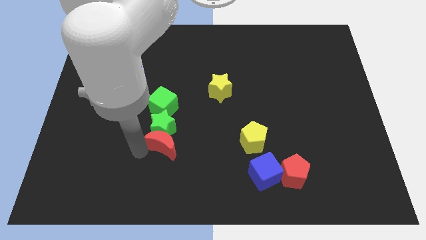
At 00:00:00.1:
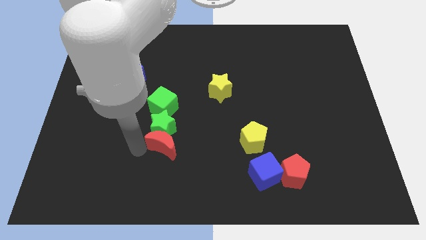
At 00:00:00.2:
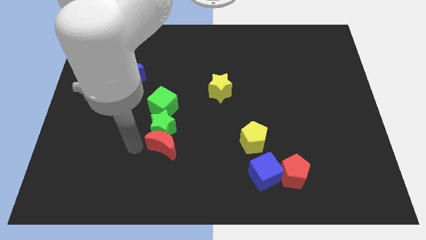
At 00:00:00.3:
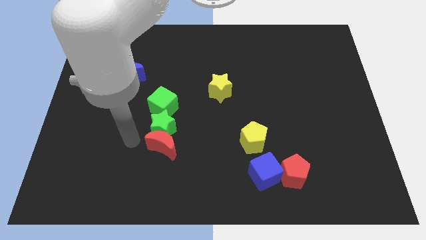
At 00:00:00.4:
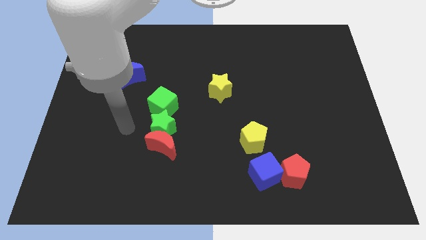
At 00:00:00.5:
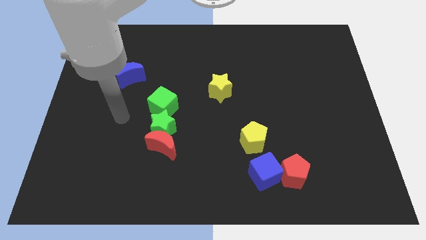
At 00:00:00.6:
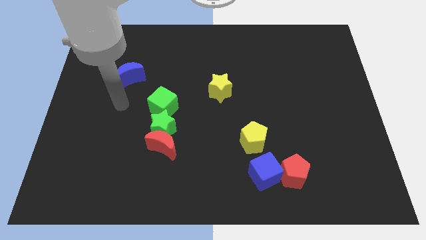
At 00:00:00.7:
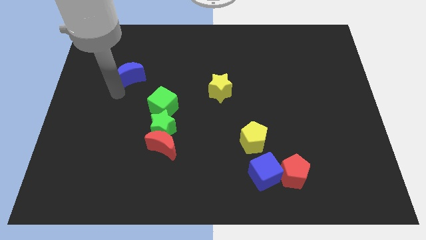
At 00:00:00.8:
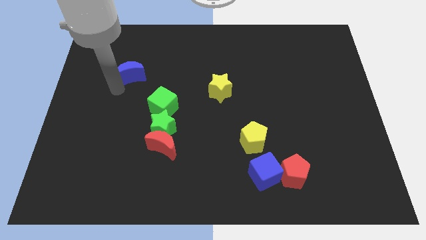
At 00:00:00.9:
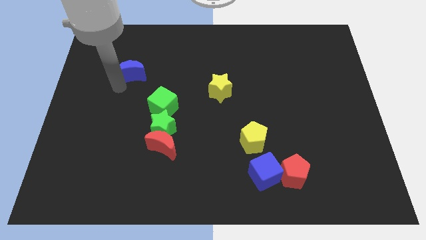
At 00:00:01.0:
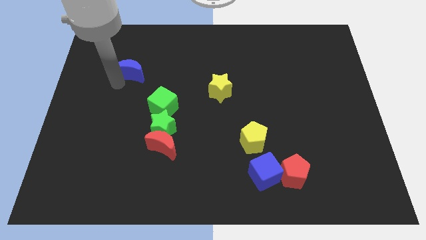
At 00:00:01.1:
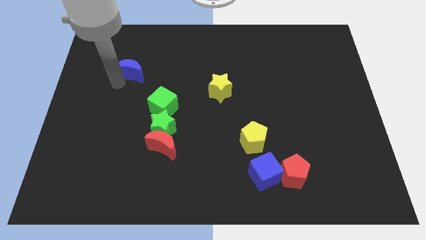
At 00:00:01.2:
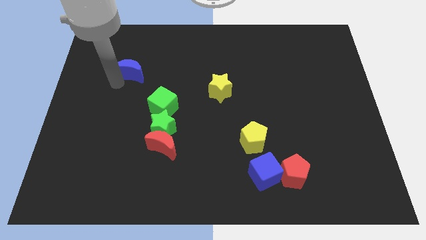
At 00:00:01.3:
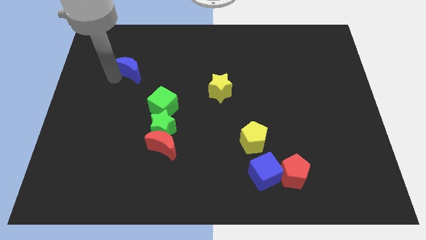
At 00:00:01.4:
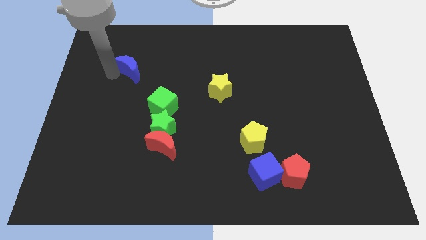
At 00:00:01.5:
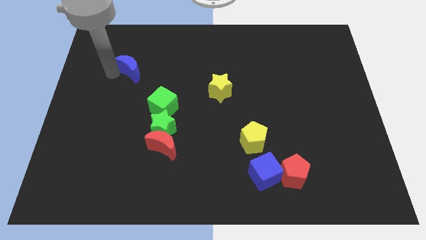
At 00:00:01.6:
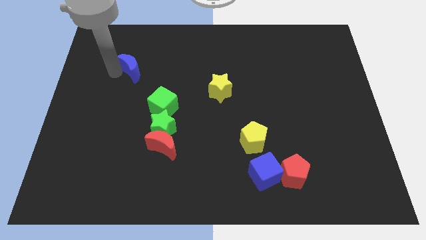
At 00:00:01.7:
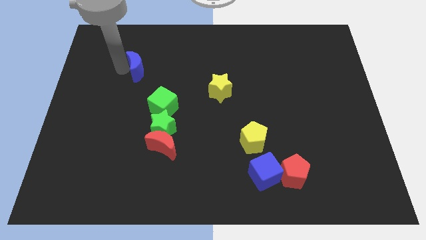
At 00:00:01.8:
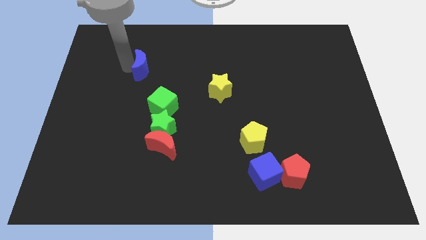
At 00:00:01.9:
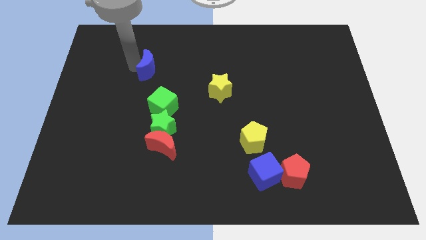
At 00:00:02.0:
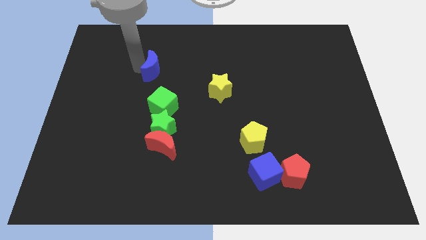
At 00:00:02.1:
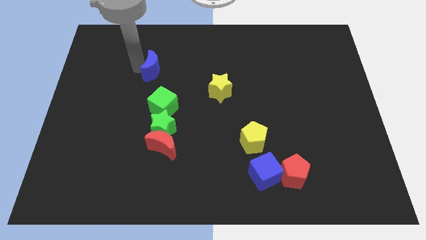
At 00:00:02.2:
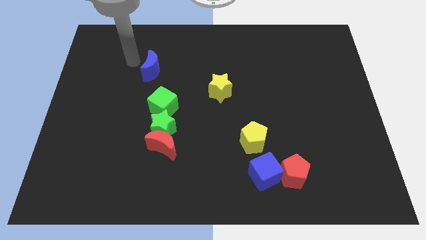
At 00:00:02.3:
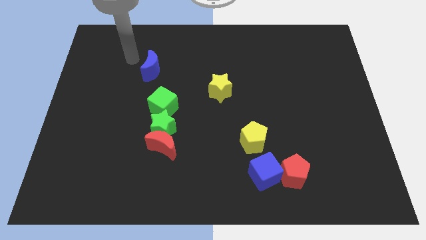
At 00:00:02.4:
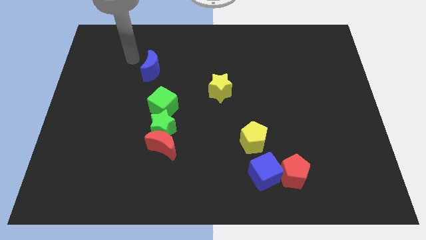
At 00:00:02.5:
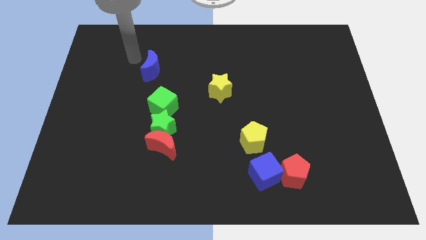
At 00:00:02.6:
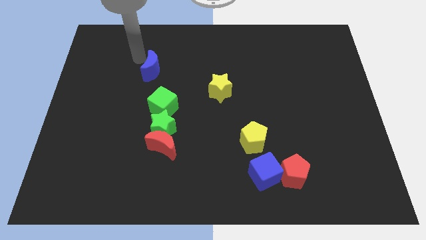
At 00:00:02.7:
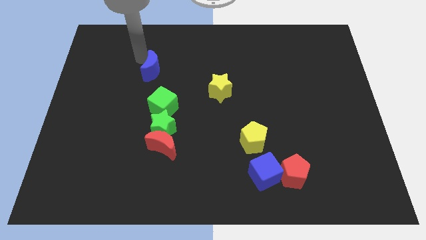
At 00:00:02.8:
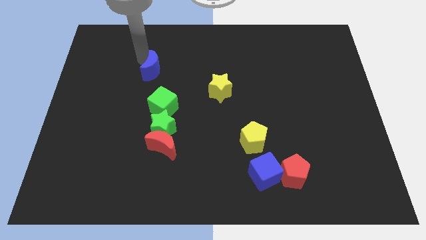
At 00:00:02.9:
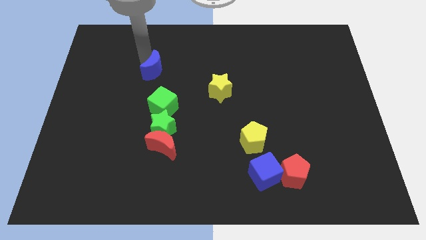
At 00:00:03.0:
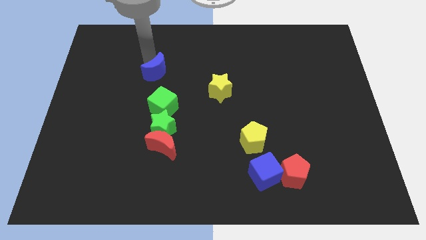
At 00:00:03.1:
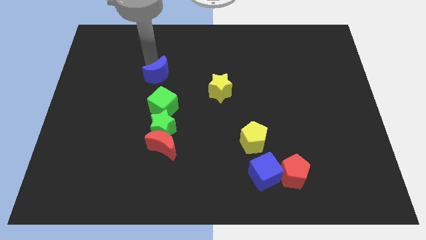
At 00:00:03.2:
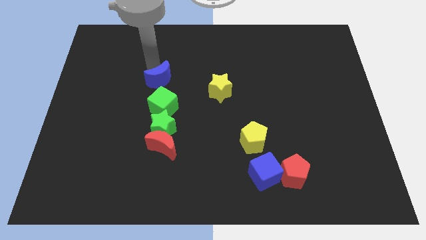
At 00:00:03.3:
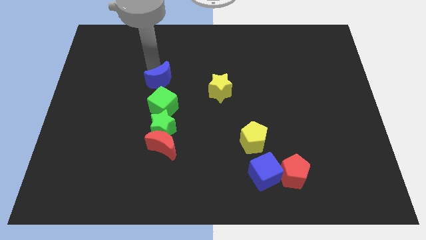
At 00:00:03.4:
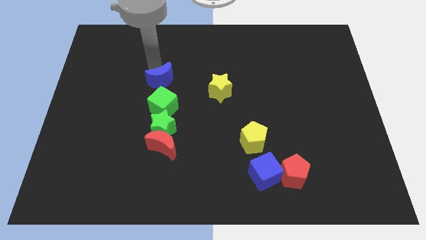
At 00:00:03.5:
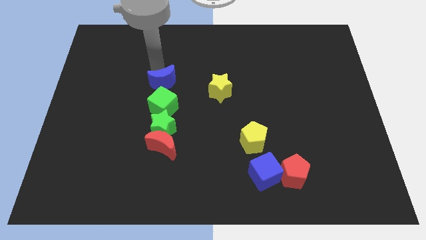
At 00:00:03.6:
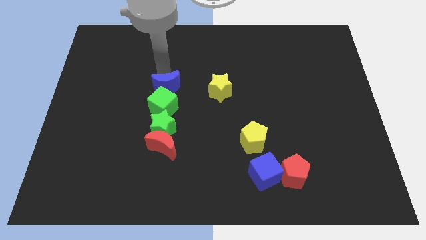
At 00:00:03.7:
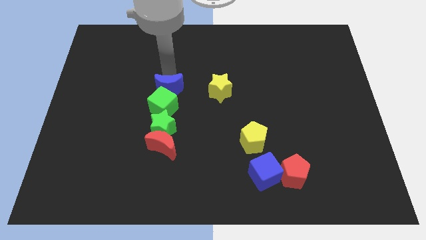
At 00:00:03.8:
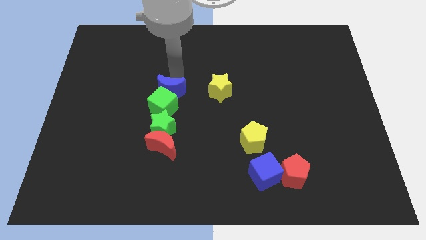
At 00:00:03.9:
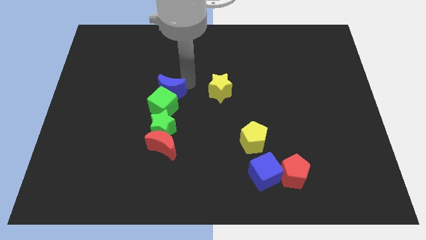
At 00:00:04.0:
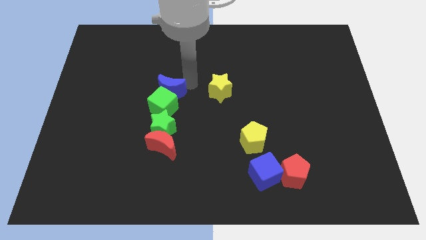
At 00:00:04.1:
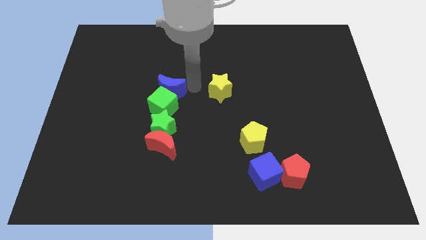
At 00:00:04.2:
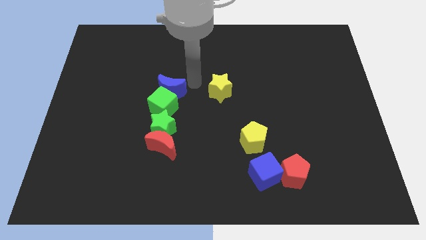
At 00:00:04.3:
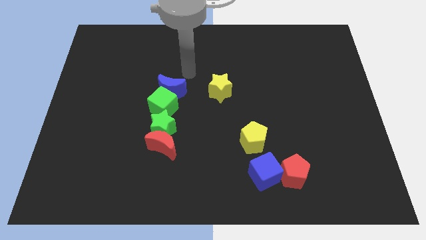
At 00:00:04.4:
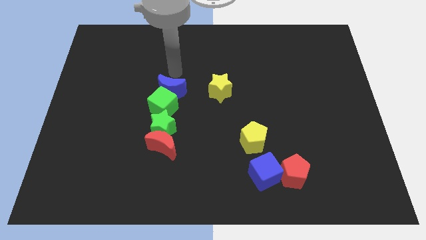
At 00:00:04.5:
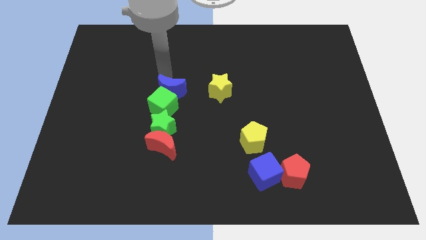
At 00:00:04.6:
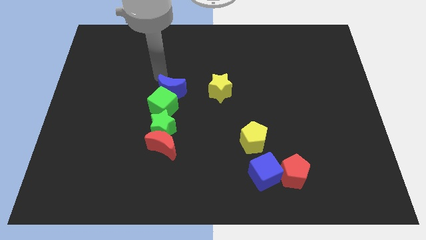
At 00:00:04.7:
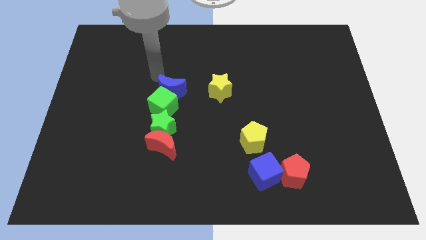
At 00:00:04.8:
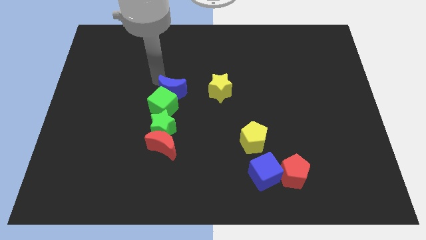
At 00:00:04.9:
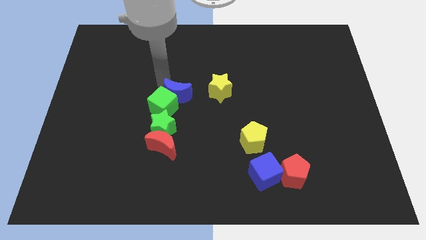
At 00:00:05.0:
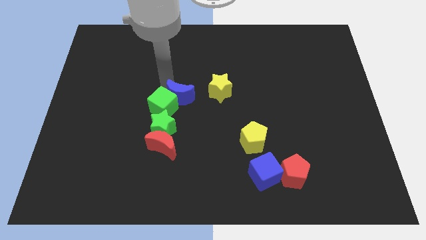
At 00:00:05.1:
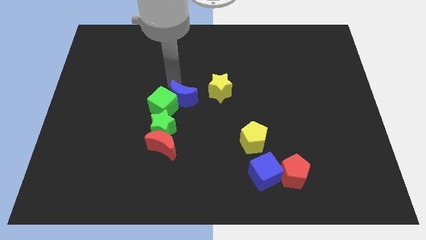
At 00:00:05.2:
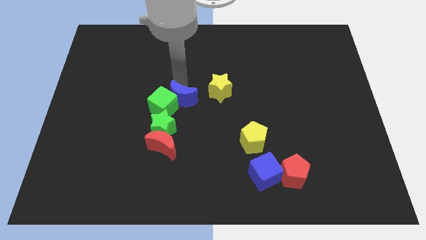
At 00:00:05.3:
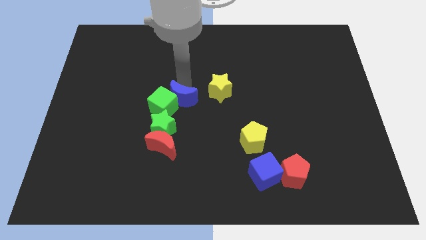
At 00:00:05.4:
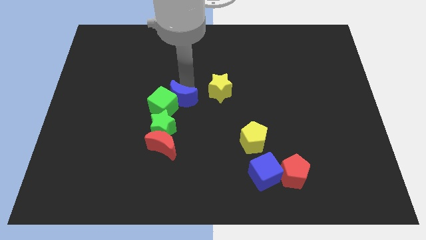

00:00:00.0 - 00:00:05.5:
place the blue moon in between the yellow star and green cube

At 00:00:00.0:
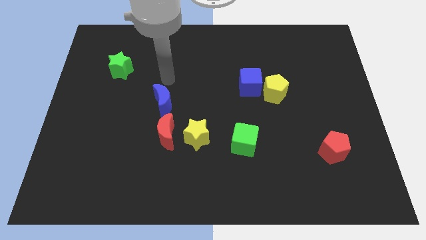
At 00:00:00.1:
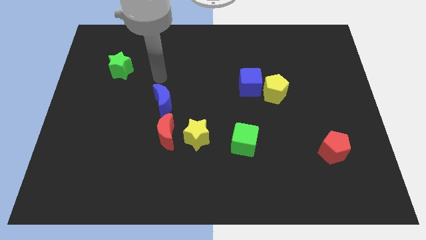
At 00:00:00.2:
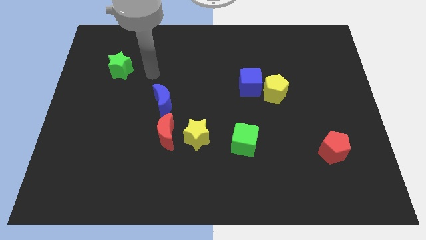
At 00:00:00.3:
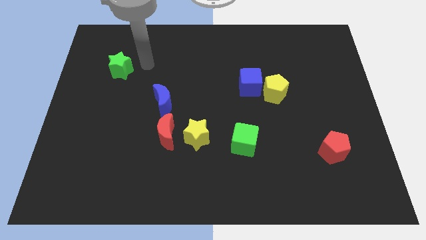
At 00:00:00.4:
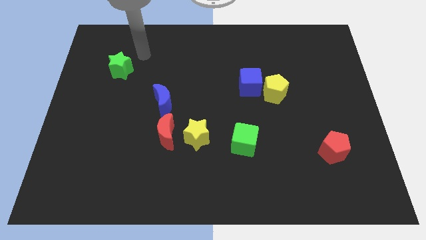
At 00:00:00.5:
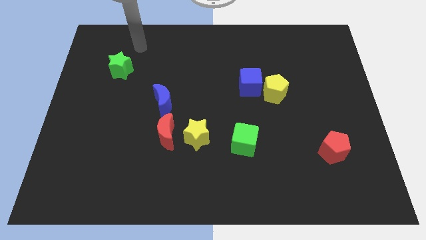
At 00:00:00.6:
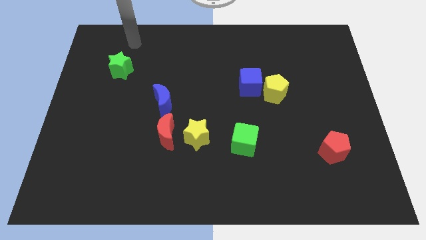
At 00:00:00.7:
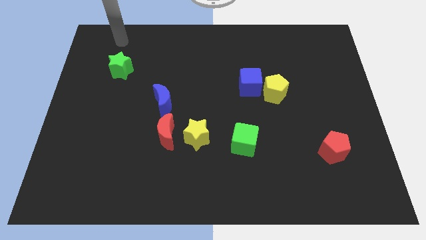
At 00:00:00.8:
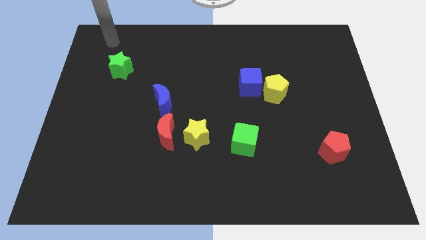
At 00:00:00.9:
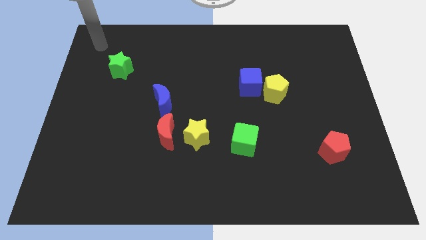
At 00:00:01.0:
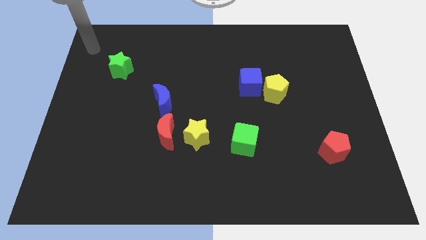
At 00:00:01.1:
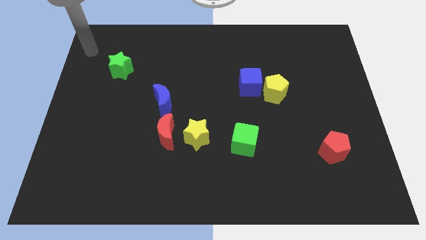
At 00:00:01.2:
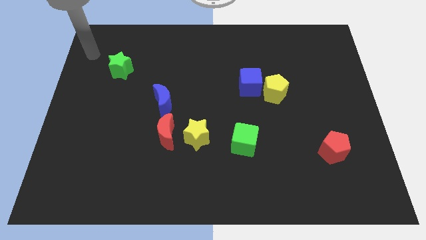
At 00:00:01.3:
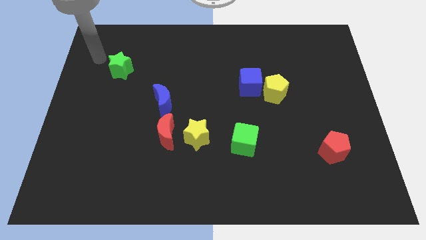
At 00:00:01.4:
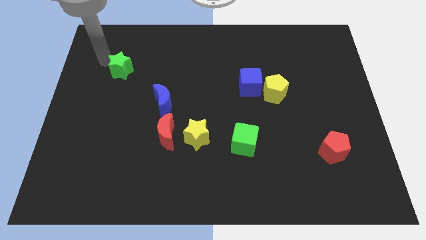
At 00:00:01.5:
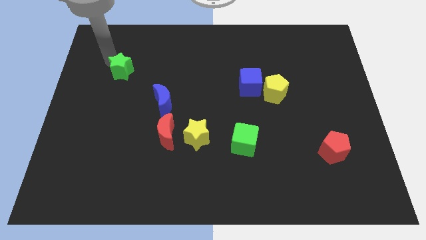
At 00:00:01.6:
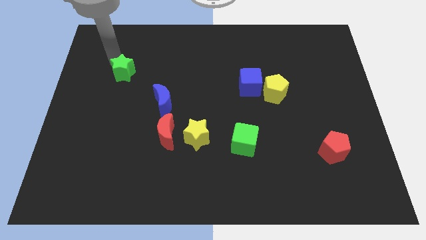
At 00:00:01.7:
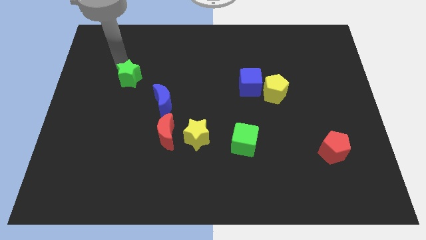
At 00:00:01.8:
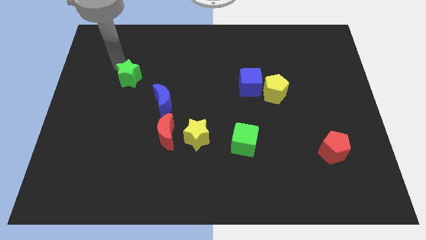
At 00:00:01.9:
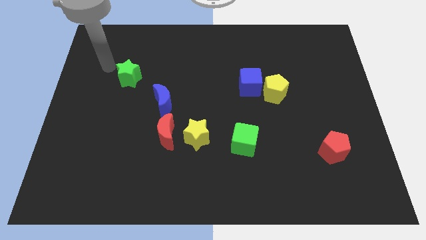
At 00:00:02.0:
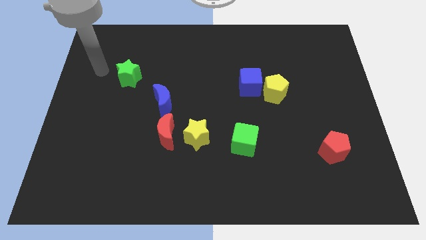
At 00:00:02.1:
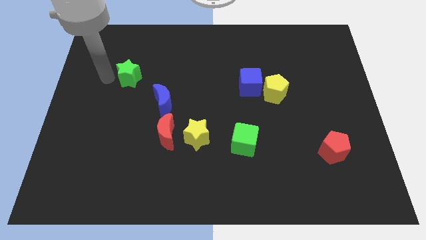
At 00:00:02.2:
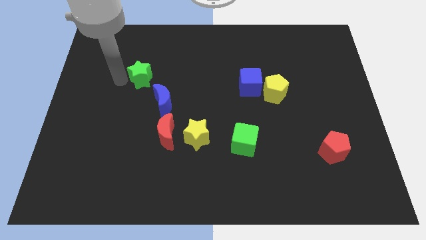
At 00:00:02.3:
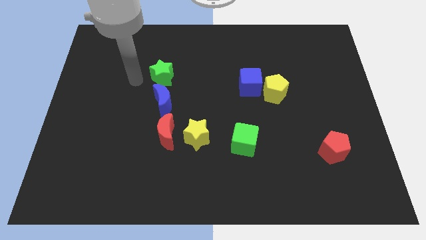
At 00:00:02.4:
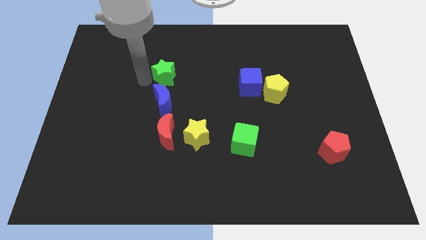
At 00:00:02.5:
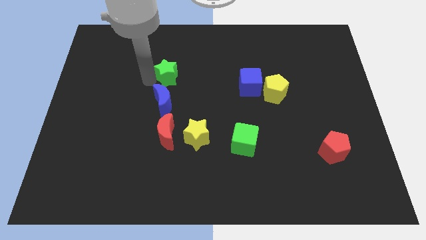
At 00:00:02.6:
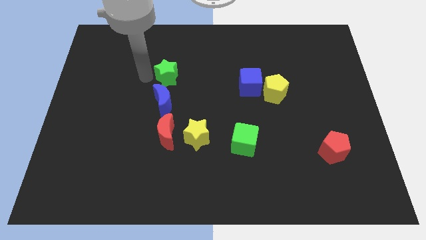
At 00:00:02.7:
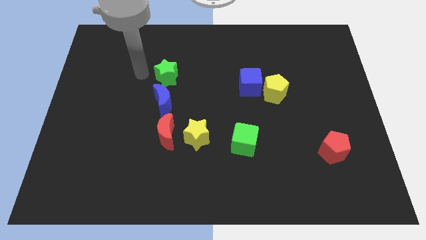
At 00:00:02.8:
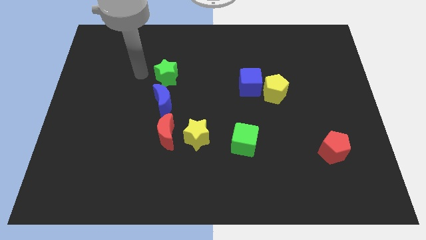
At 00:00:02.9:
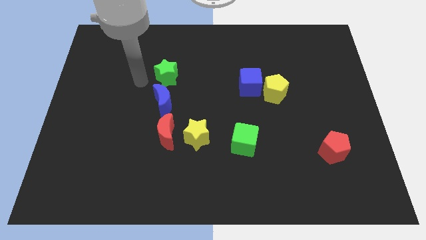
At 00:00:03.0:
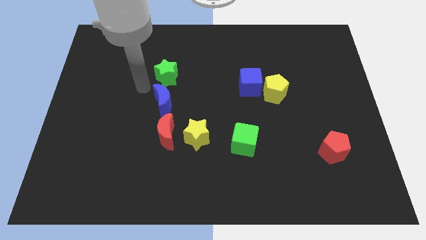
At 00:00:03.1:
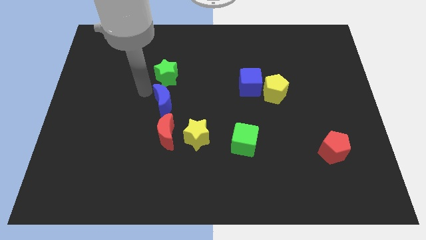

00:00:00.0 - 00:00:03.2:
move the green star to the top of the blue crescent
